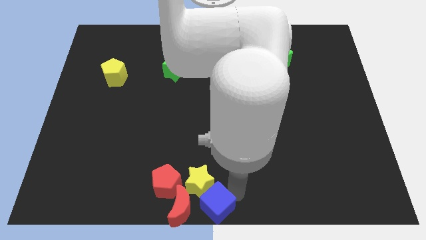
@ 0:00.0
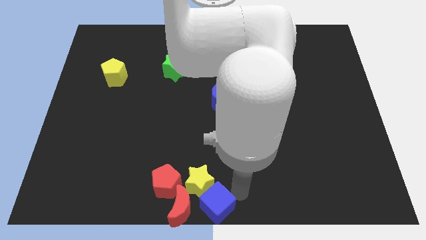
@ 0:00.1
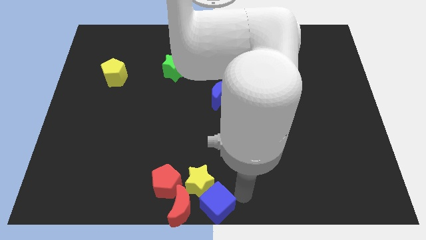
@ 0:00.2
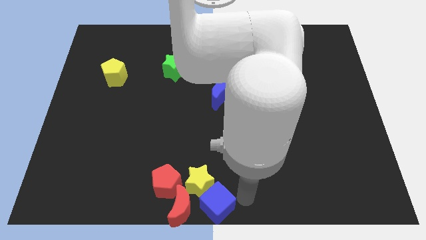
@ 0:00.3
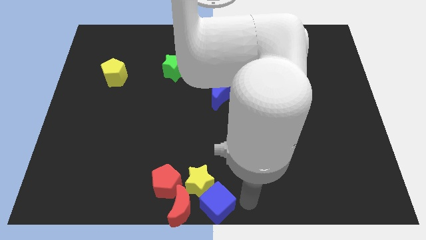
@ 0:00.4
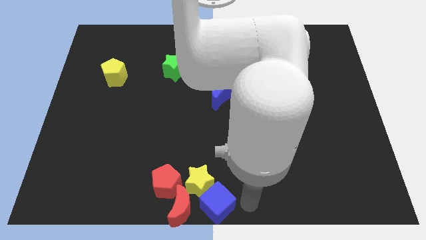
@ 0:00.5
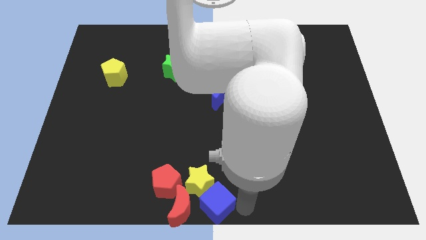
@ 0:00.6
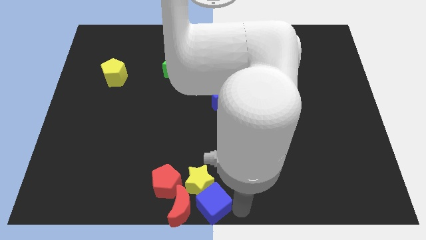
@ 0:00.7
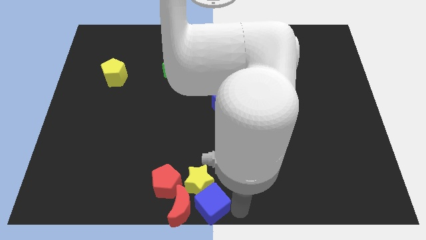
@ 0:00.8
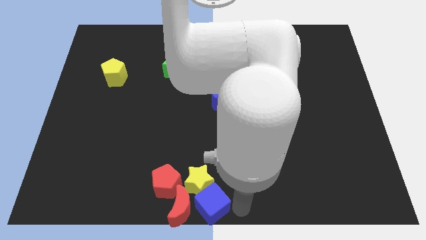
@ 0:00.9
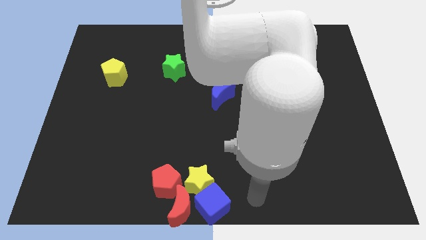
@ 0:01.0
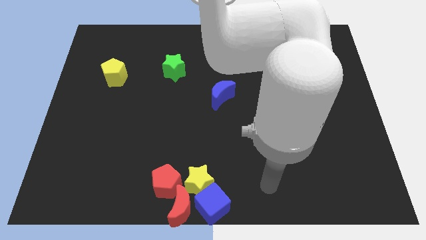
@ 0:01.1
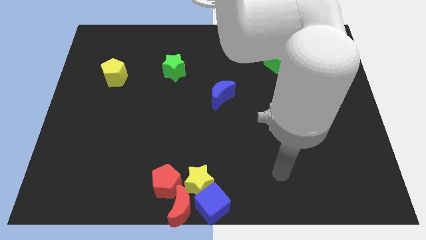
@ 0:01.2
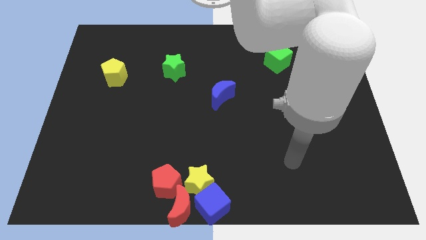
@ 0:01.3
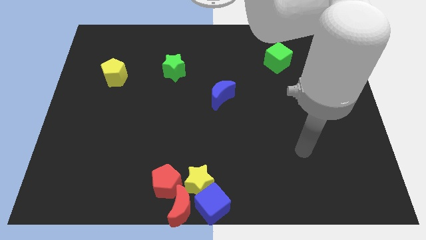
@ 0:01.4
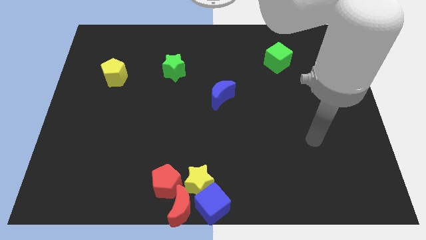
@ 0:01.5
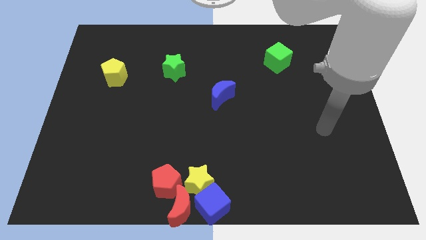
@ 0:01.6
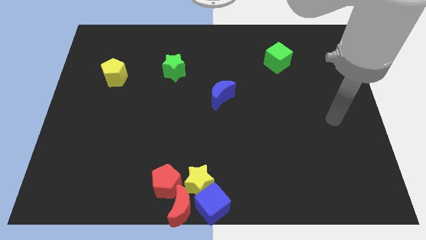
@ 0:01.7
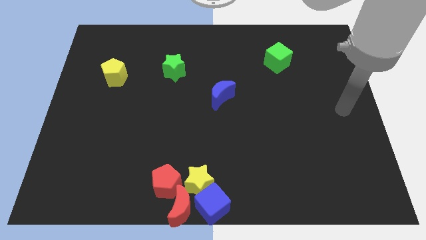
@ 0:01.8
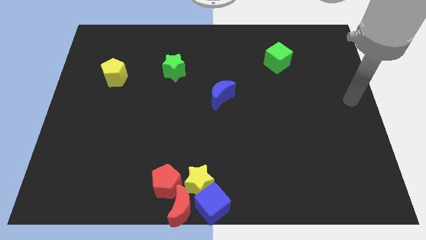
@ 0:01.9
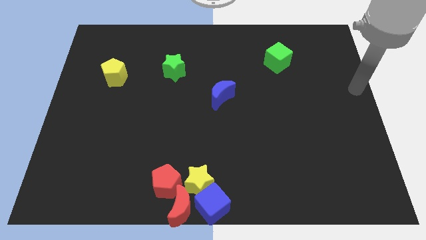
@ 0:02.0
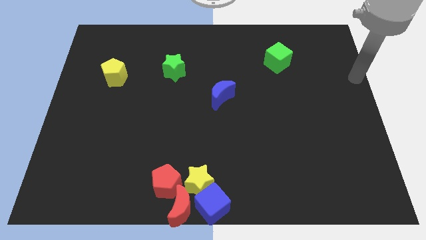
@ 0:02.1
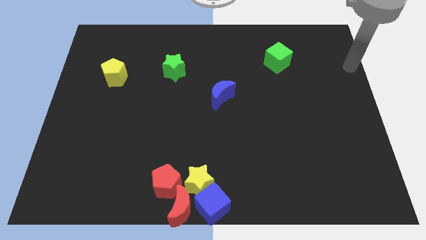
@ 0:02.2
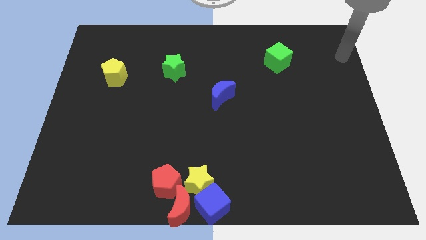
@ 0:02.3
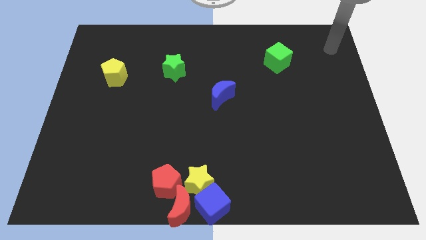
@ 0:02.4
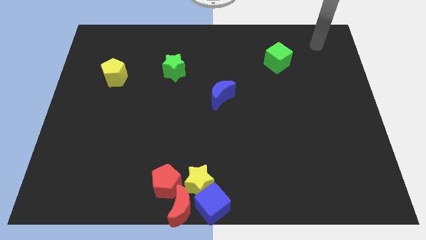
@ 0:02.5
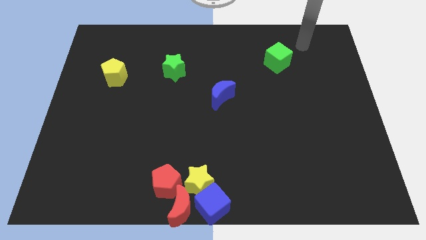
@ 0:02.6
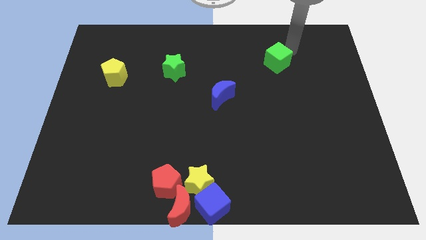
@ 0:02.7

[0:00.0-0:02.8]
move your arm to the right of the green cube

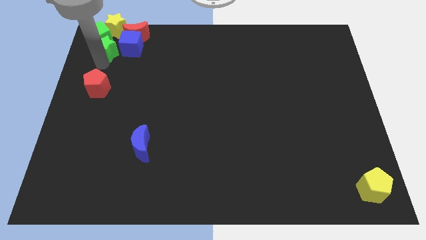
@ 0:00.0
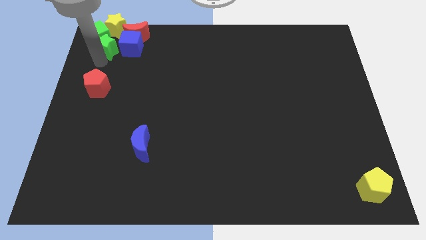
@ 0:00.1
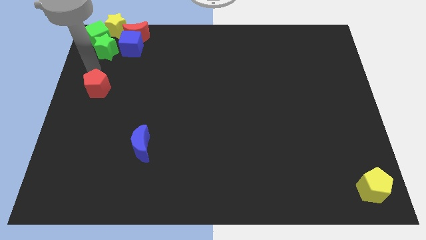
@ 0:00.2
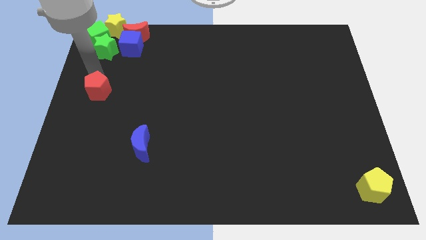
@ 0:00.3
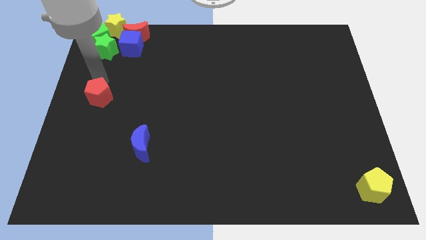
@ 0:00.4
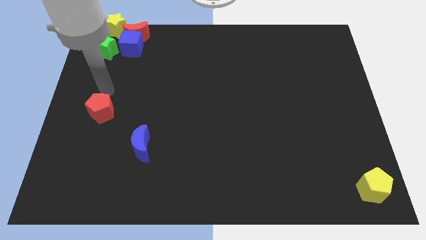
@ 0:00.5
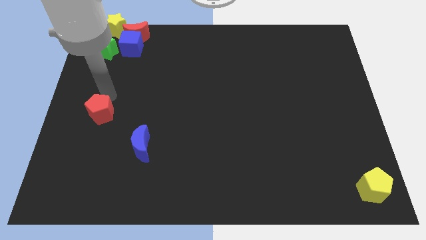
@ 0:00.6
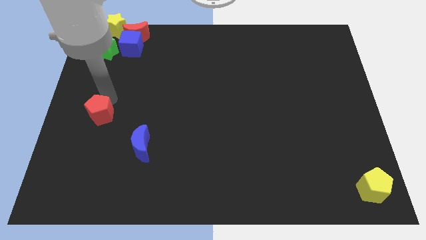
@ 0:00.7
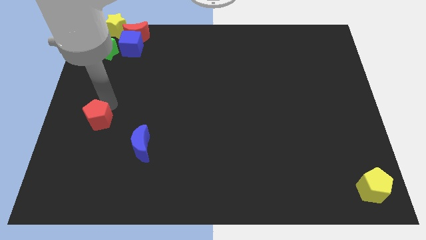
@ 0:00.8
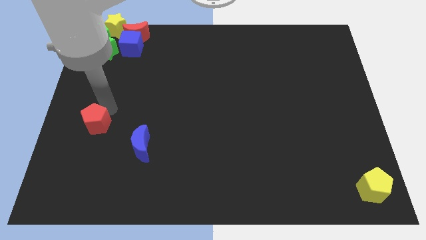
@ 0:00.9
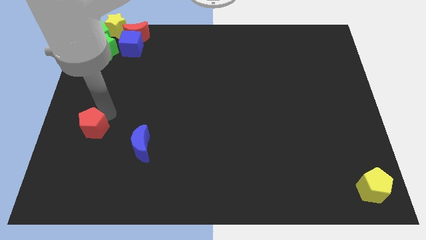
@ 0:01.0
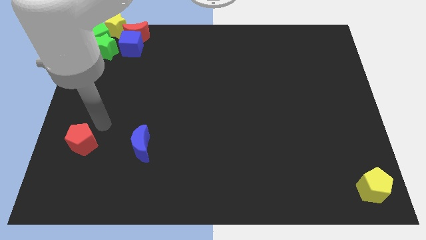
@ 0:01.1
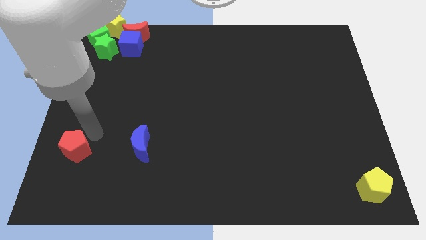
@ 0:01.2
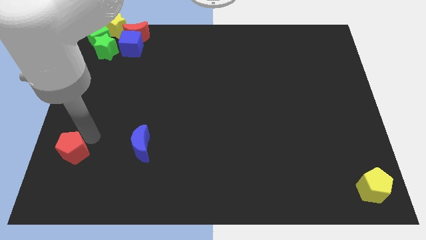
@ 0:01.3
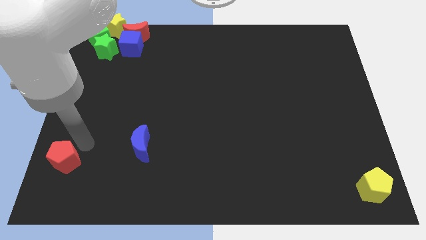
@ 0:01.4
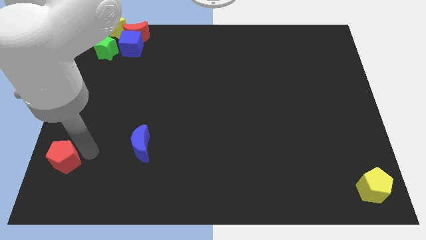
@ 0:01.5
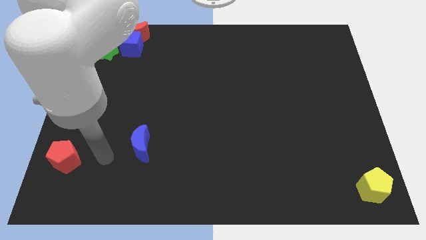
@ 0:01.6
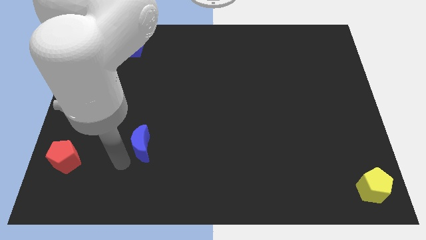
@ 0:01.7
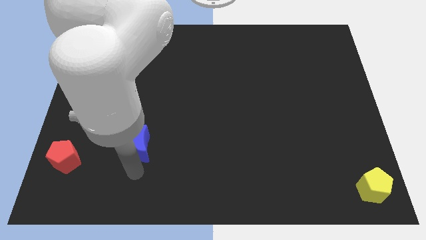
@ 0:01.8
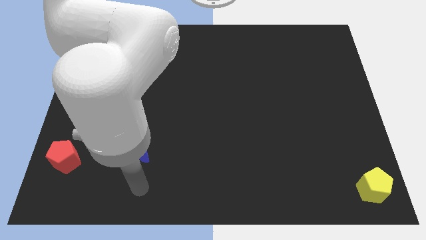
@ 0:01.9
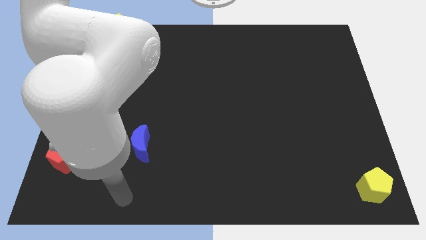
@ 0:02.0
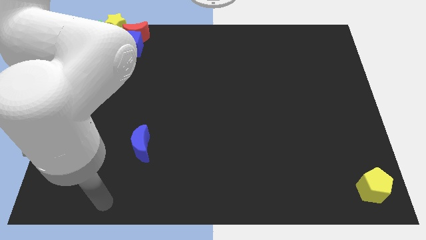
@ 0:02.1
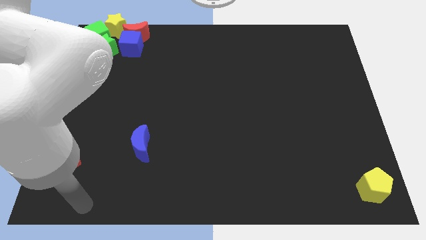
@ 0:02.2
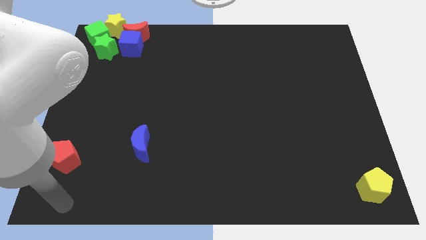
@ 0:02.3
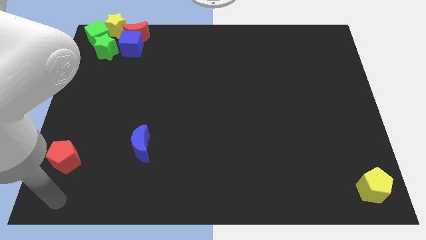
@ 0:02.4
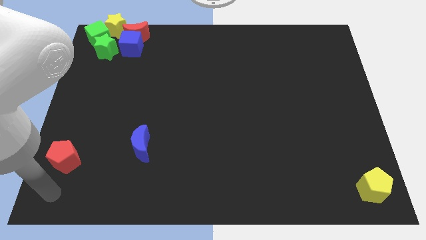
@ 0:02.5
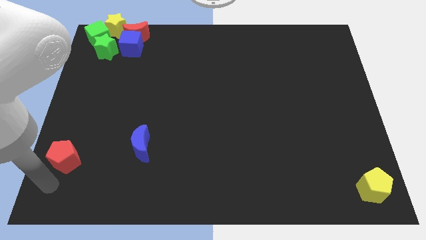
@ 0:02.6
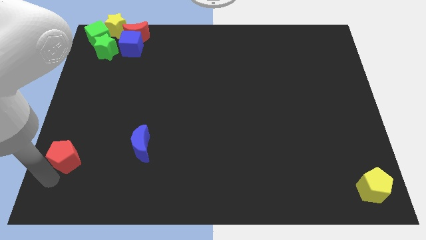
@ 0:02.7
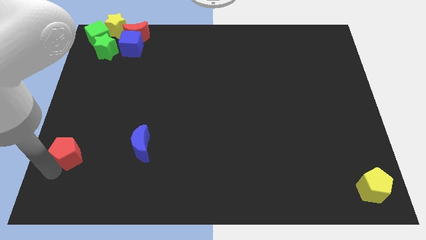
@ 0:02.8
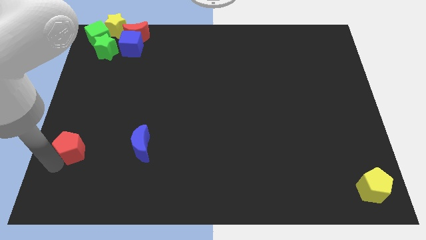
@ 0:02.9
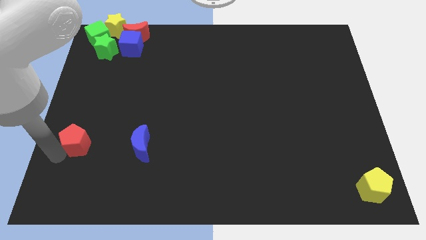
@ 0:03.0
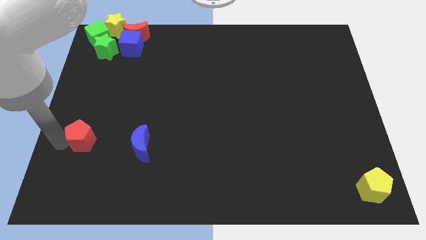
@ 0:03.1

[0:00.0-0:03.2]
push the red pentagon towards the bottom side of the board

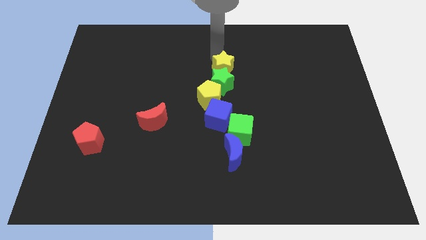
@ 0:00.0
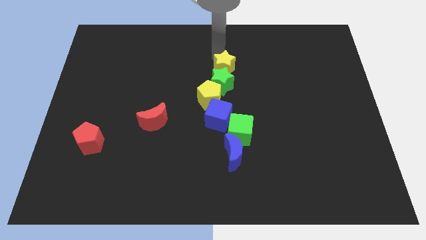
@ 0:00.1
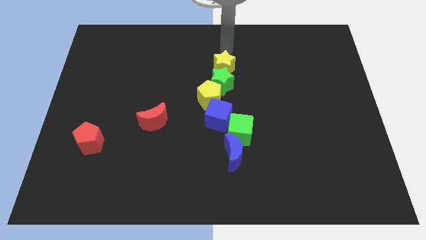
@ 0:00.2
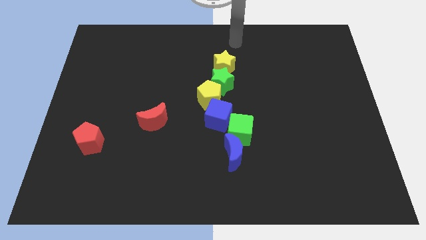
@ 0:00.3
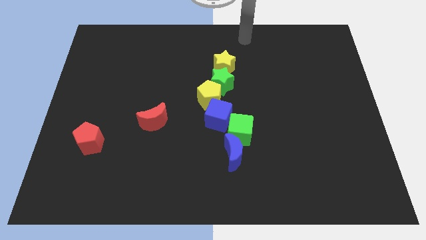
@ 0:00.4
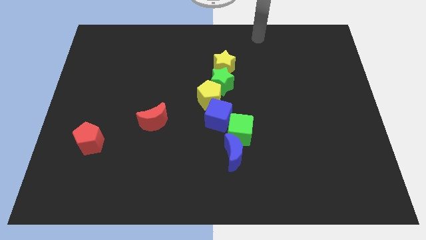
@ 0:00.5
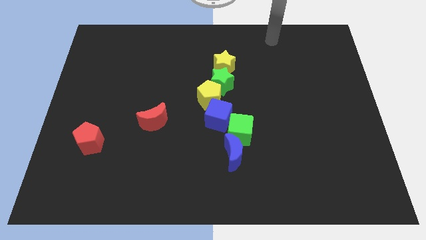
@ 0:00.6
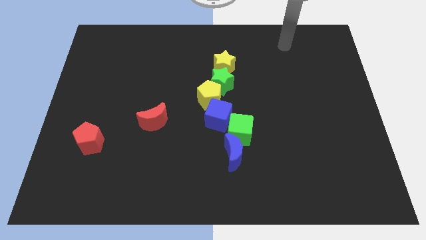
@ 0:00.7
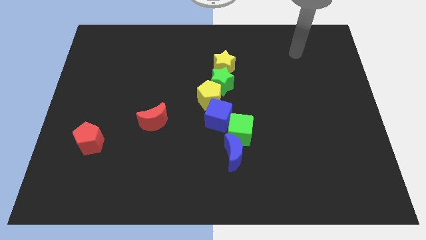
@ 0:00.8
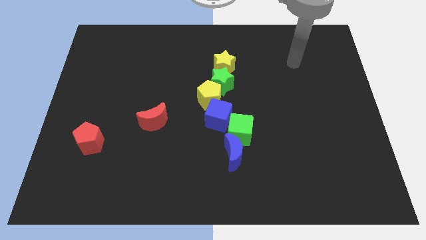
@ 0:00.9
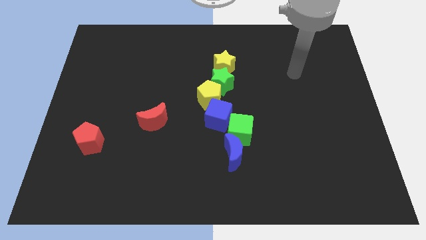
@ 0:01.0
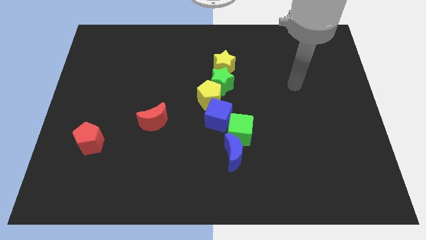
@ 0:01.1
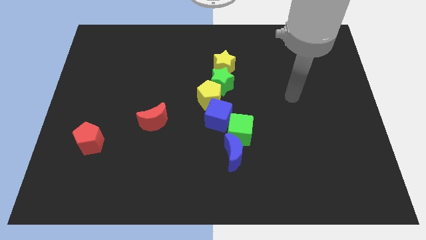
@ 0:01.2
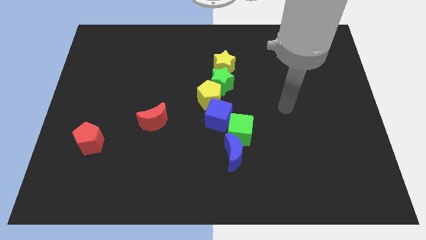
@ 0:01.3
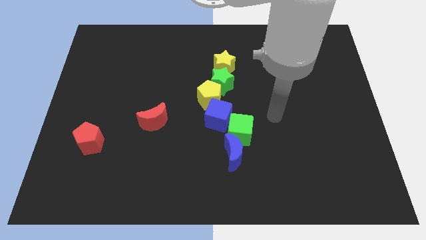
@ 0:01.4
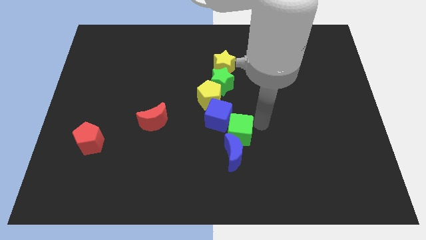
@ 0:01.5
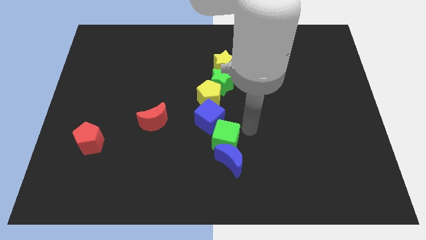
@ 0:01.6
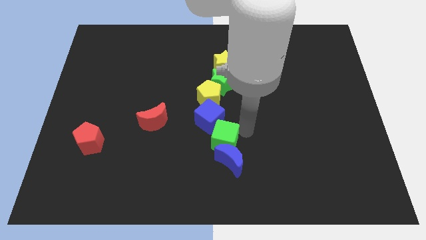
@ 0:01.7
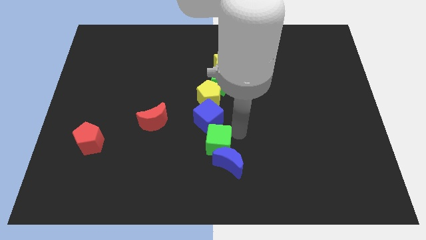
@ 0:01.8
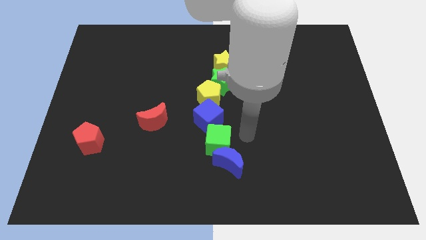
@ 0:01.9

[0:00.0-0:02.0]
adjust the green cube in between the blue blocks

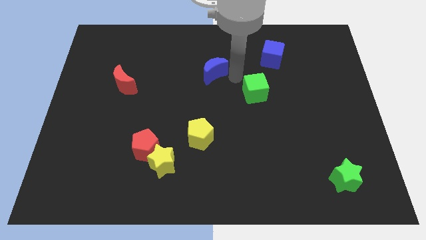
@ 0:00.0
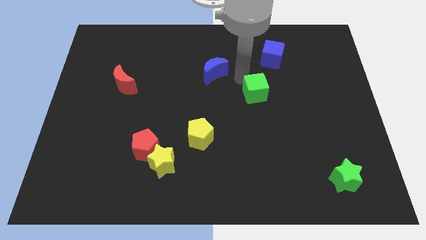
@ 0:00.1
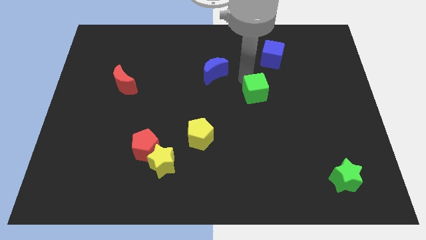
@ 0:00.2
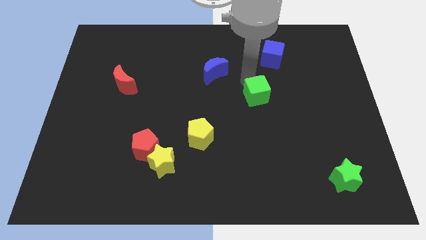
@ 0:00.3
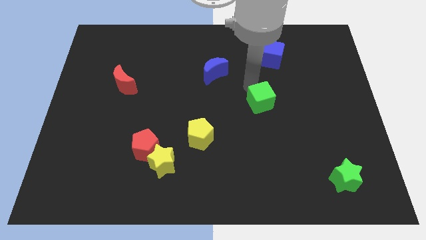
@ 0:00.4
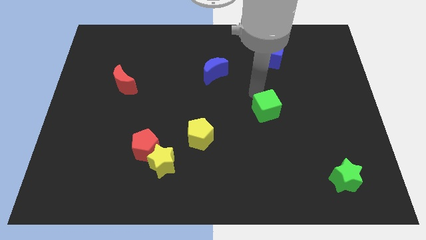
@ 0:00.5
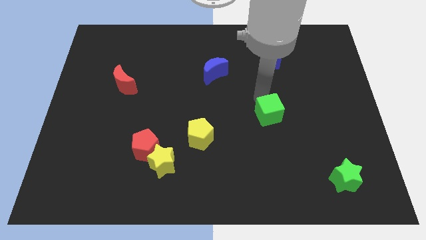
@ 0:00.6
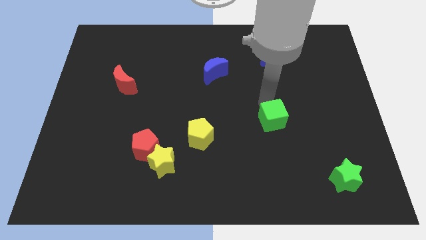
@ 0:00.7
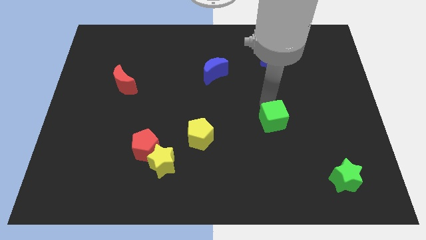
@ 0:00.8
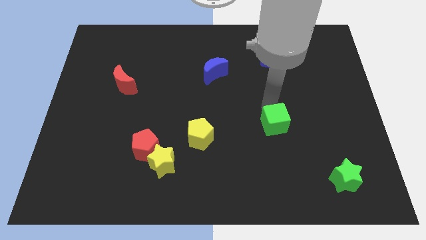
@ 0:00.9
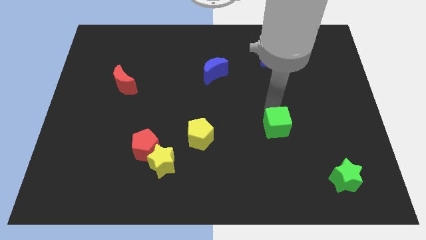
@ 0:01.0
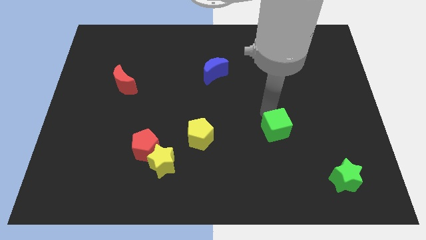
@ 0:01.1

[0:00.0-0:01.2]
move the green star downwards
